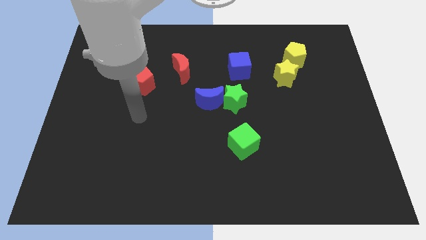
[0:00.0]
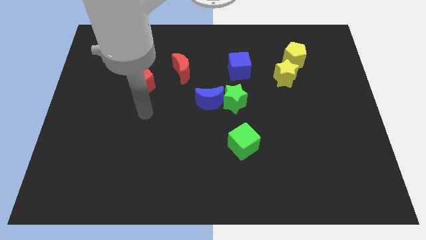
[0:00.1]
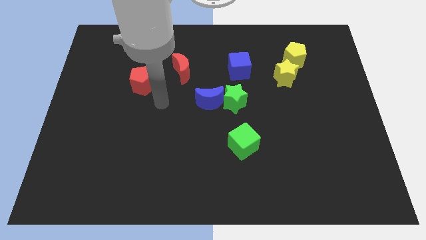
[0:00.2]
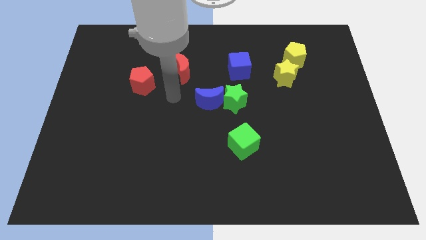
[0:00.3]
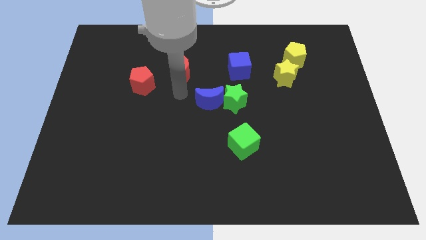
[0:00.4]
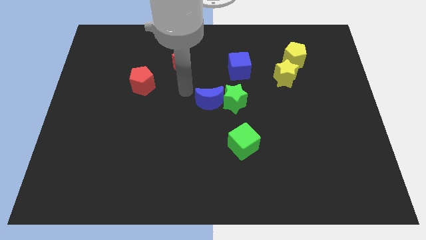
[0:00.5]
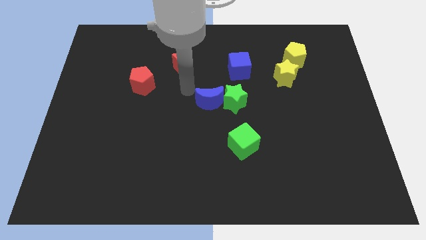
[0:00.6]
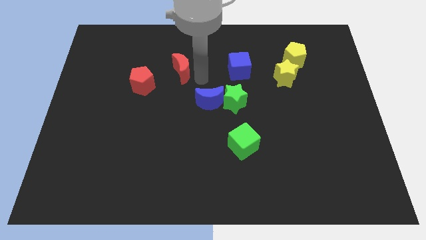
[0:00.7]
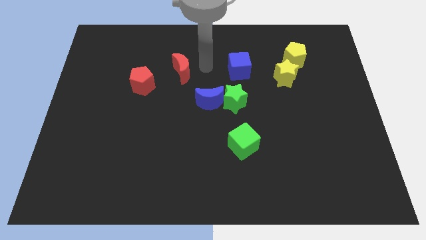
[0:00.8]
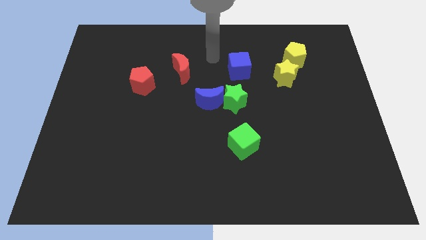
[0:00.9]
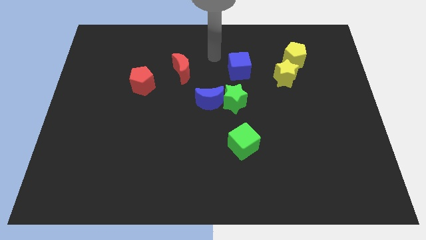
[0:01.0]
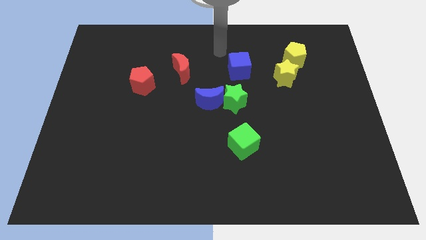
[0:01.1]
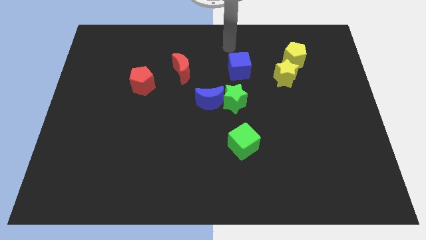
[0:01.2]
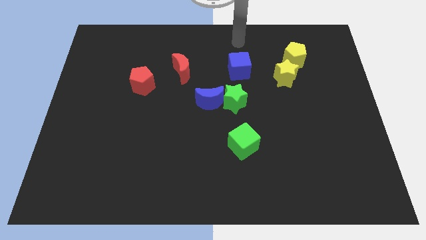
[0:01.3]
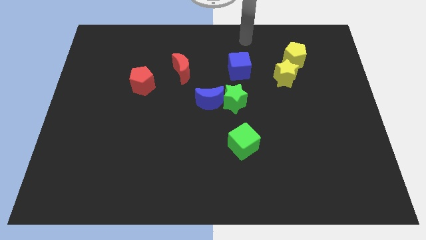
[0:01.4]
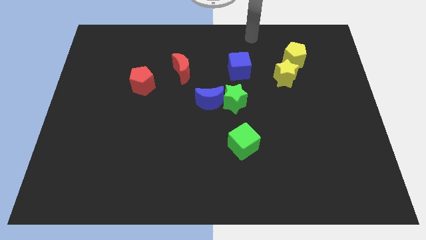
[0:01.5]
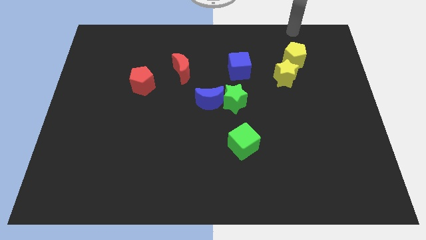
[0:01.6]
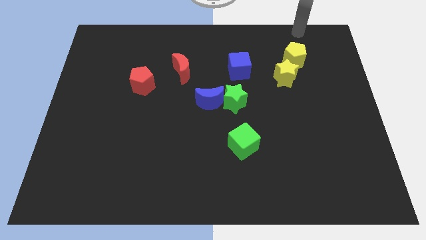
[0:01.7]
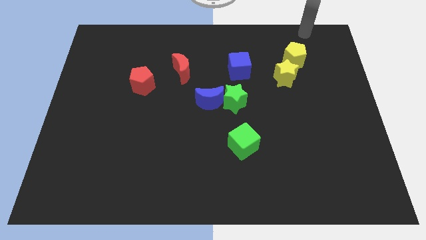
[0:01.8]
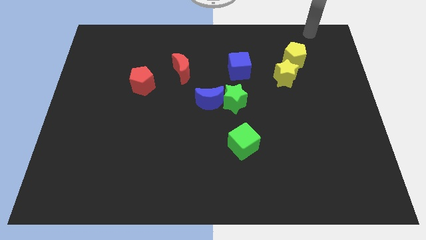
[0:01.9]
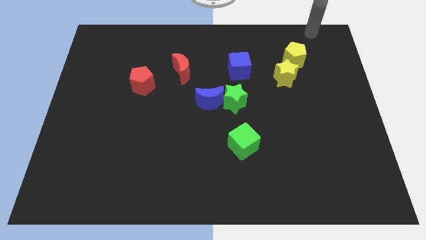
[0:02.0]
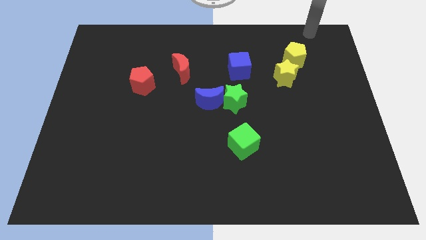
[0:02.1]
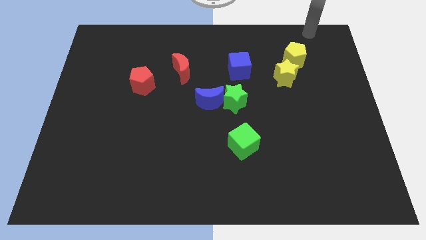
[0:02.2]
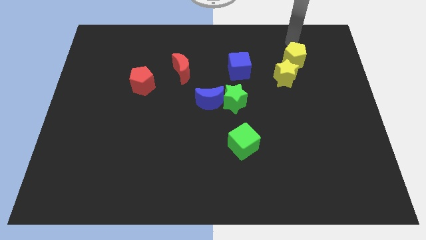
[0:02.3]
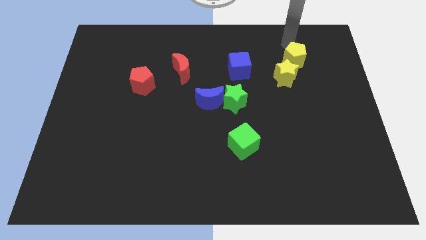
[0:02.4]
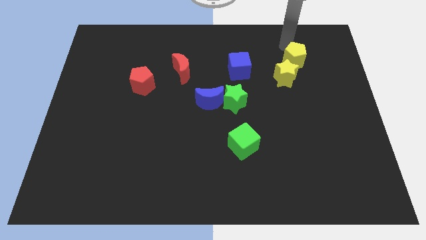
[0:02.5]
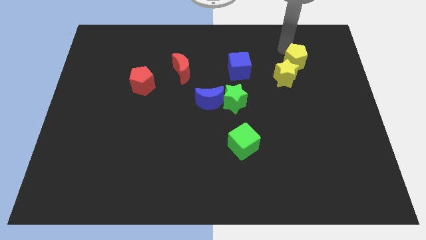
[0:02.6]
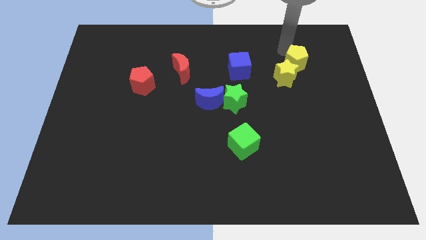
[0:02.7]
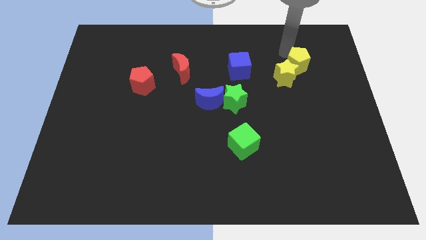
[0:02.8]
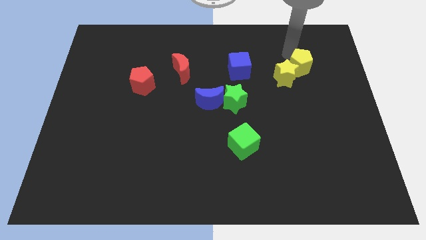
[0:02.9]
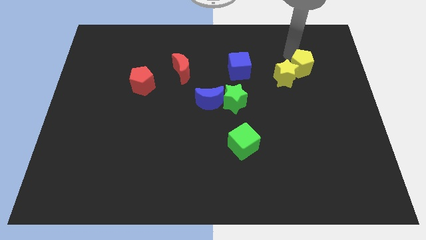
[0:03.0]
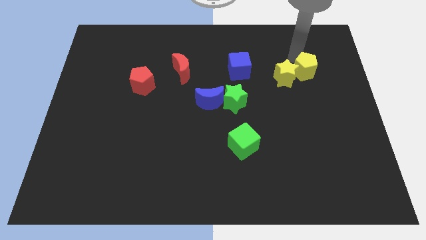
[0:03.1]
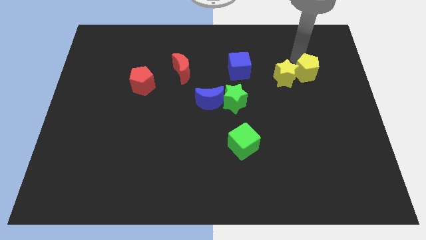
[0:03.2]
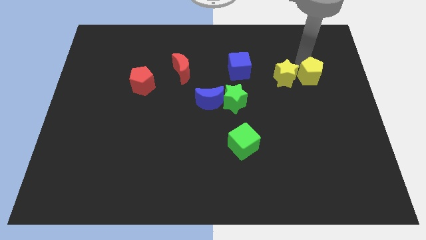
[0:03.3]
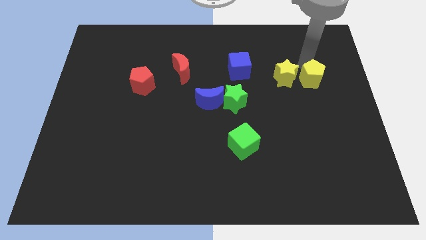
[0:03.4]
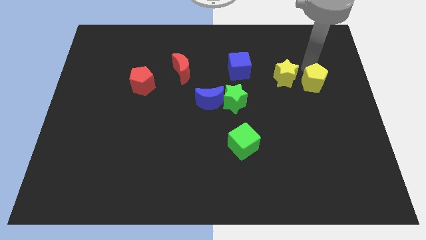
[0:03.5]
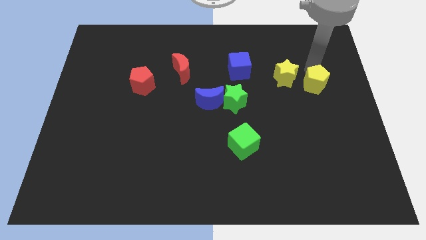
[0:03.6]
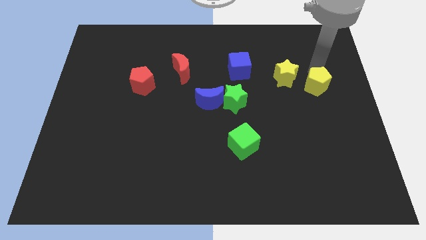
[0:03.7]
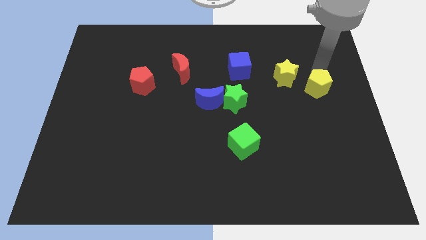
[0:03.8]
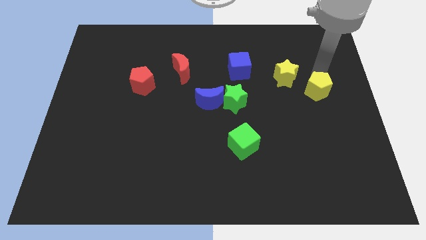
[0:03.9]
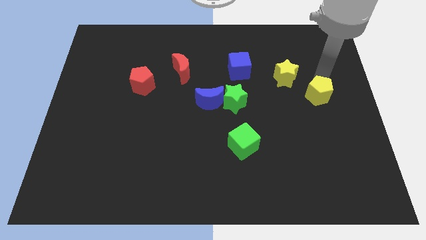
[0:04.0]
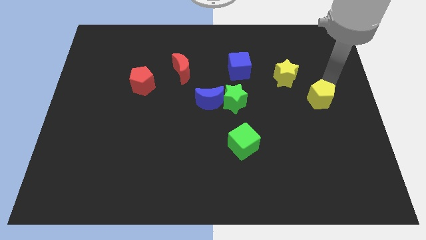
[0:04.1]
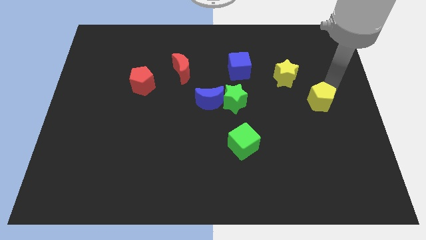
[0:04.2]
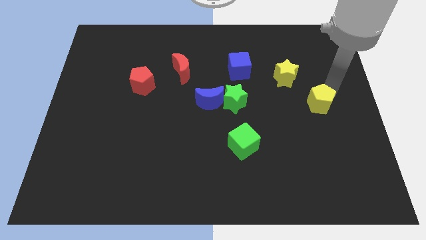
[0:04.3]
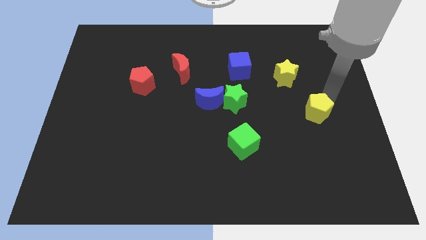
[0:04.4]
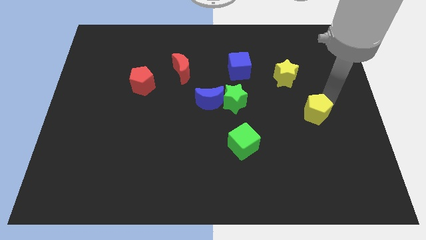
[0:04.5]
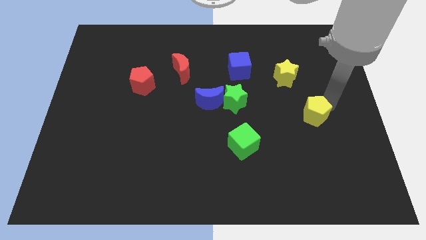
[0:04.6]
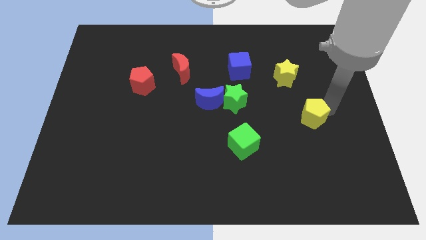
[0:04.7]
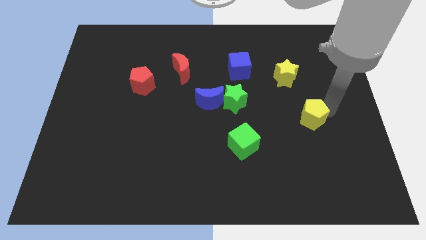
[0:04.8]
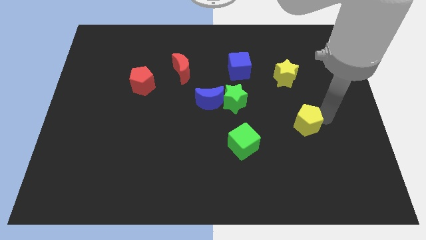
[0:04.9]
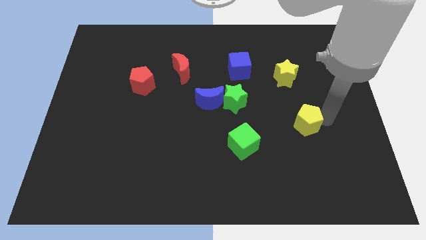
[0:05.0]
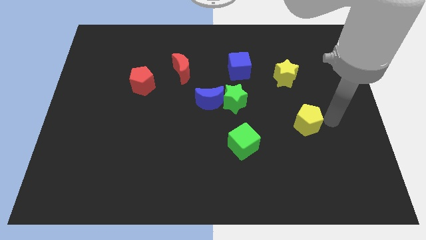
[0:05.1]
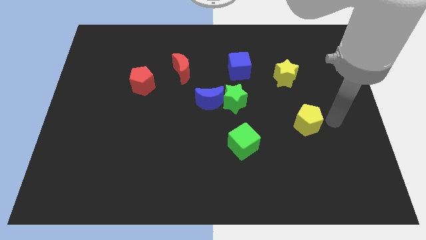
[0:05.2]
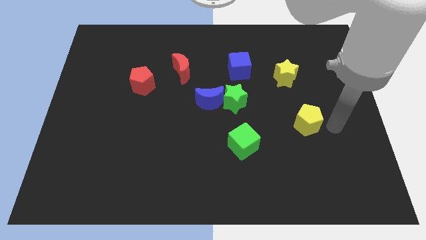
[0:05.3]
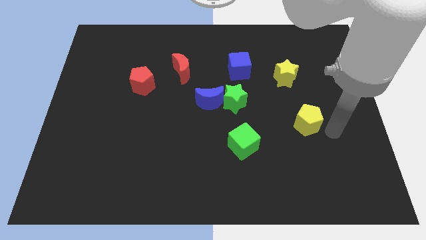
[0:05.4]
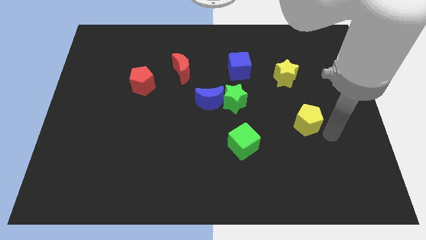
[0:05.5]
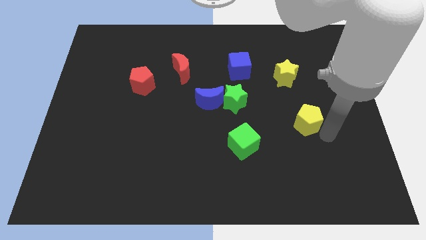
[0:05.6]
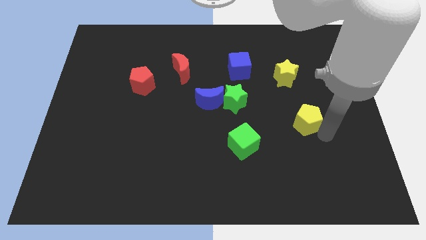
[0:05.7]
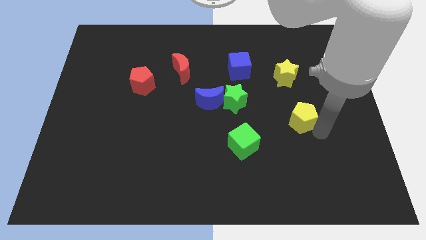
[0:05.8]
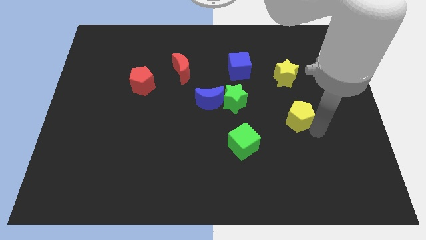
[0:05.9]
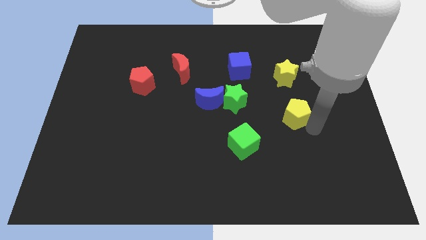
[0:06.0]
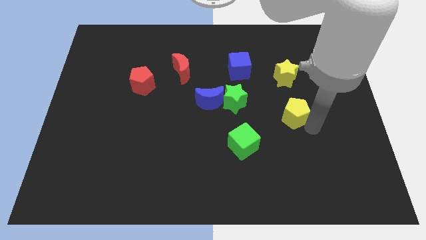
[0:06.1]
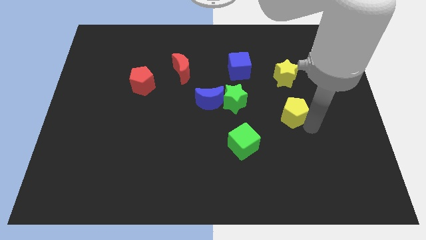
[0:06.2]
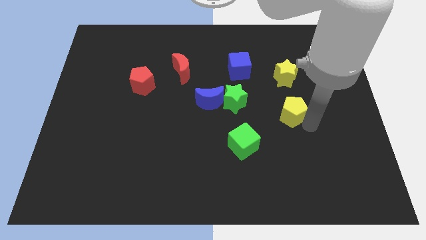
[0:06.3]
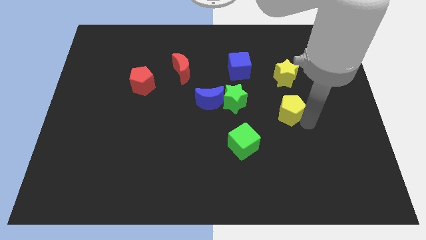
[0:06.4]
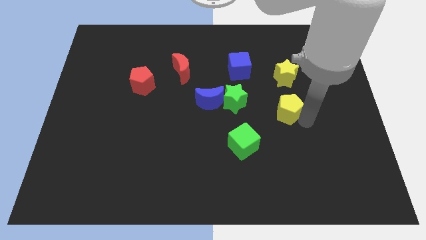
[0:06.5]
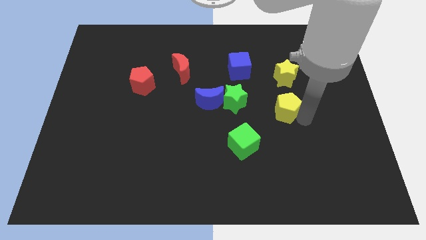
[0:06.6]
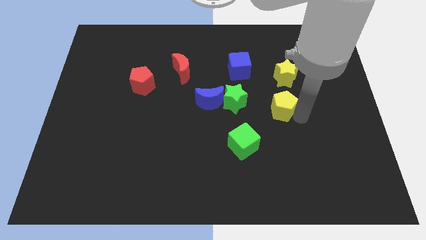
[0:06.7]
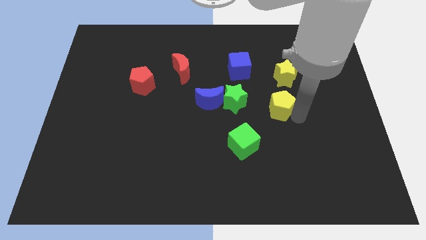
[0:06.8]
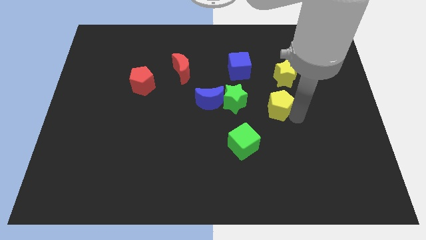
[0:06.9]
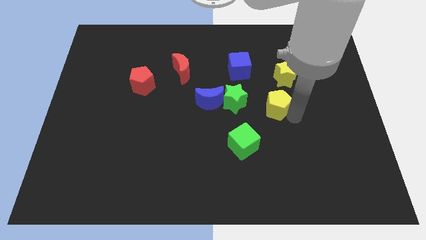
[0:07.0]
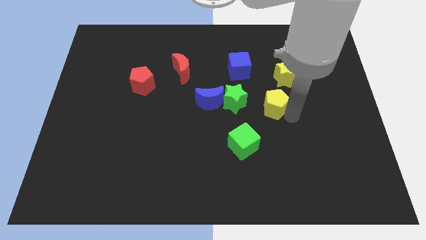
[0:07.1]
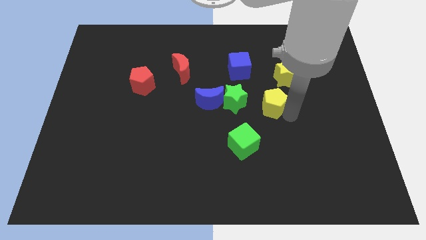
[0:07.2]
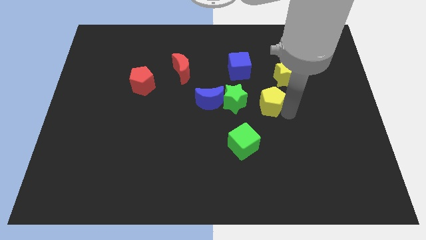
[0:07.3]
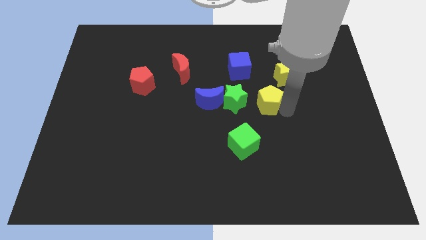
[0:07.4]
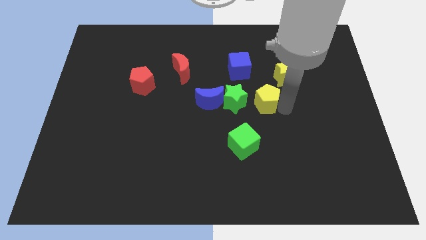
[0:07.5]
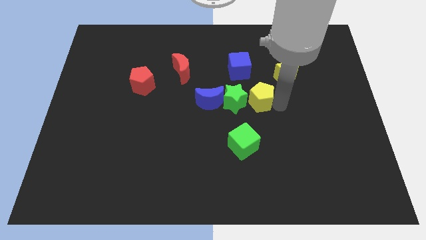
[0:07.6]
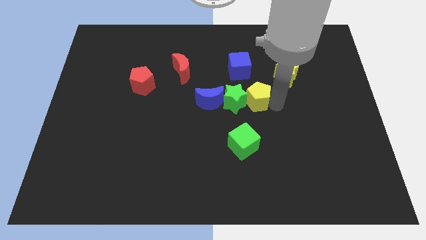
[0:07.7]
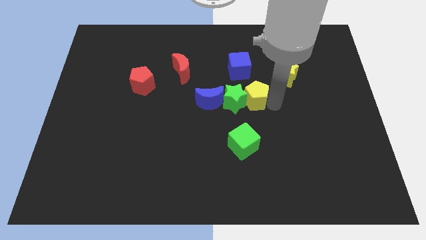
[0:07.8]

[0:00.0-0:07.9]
push the yellow pentagon towards the green star

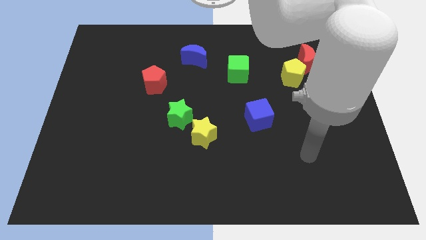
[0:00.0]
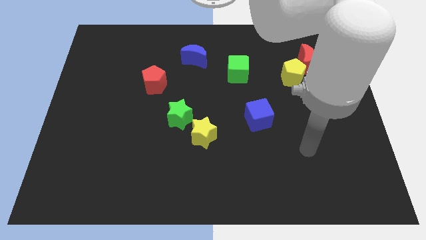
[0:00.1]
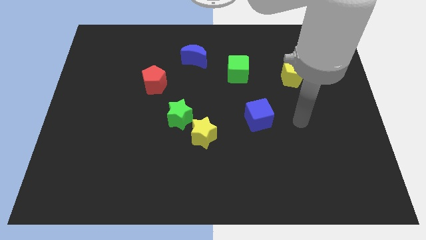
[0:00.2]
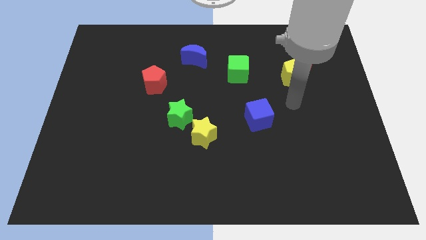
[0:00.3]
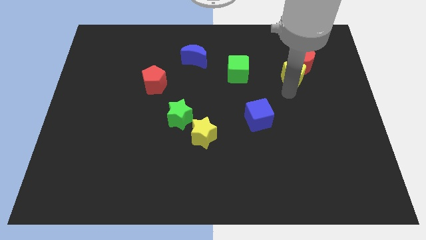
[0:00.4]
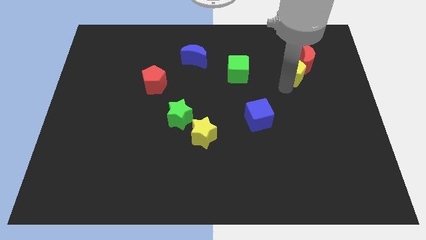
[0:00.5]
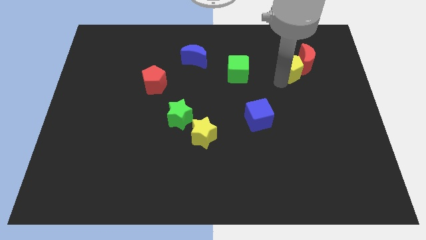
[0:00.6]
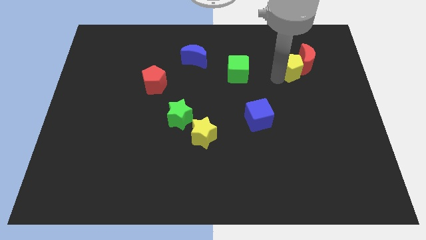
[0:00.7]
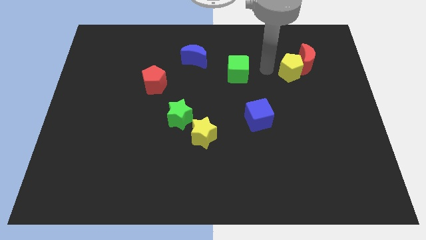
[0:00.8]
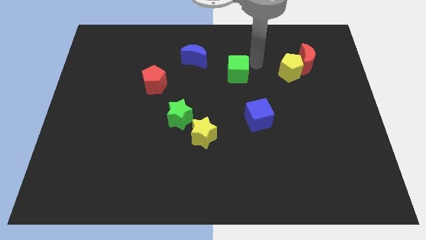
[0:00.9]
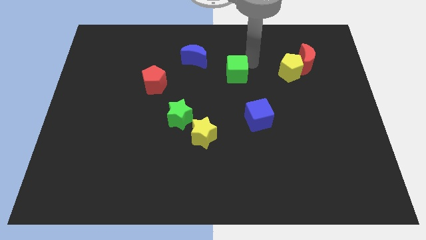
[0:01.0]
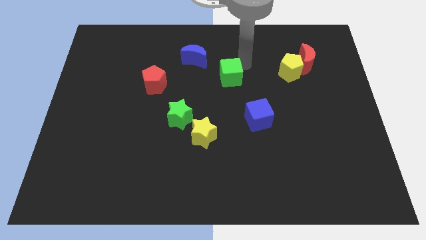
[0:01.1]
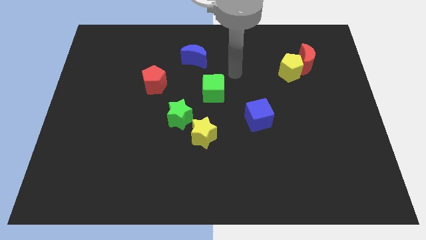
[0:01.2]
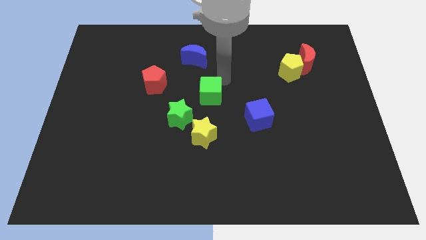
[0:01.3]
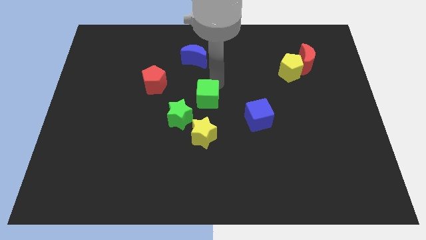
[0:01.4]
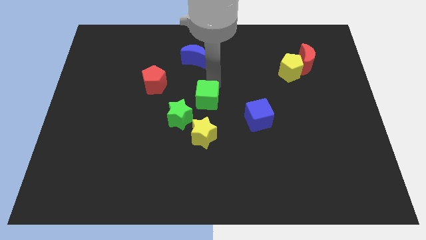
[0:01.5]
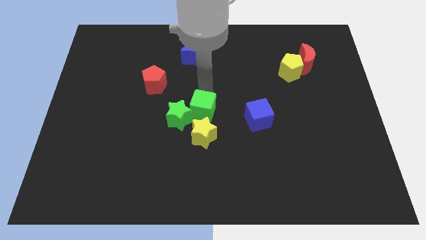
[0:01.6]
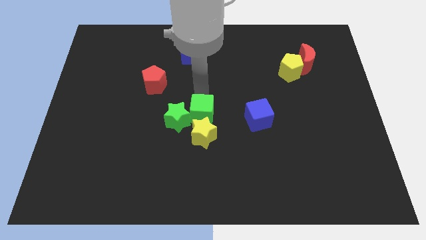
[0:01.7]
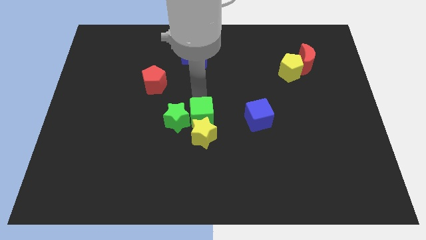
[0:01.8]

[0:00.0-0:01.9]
push the green cube to the green star
